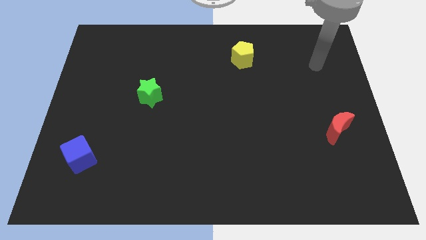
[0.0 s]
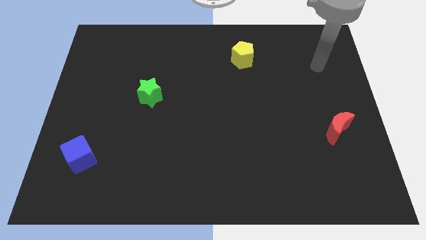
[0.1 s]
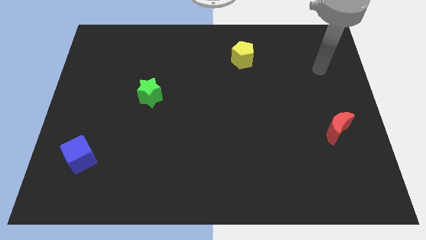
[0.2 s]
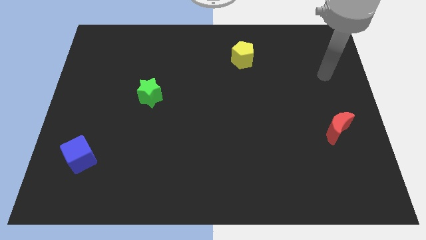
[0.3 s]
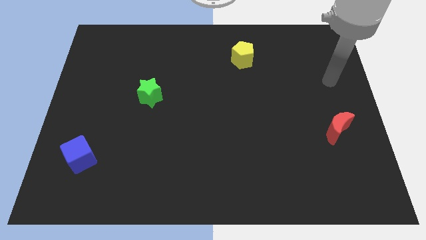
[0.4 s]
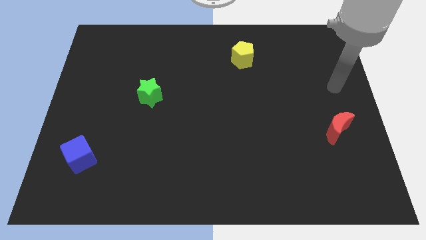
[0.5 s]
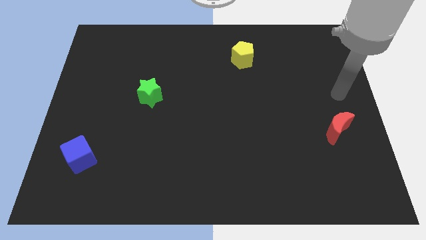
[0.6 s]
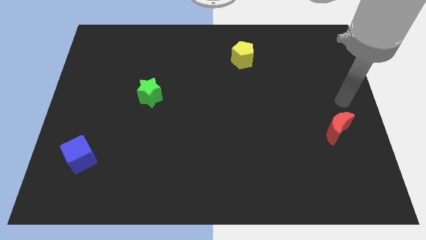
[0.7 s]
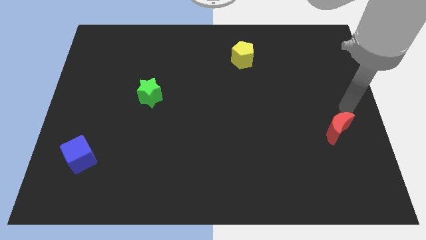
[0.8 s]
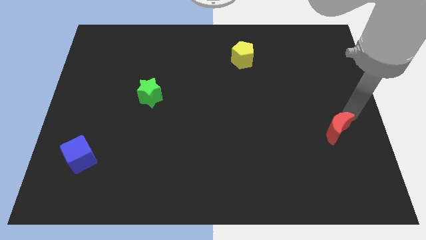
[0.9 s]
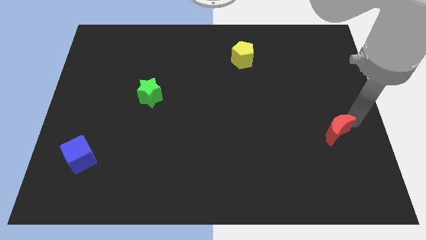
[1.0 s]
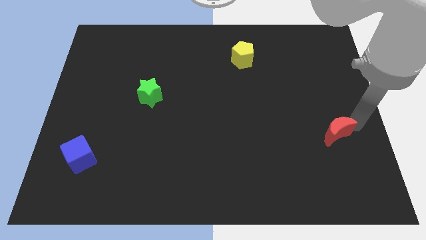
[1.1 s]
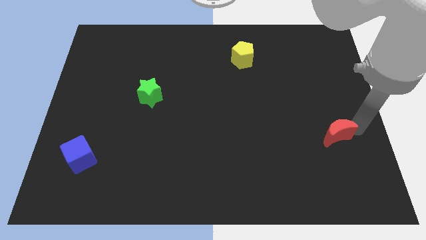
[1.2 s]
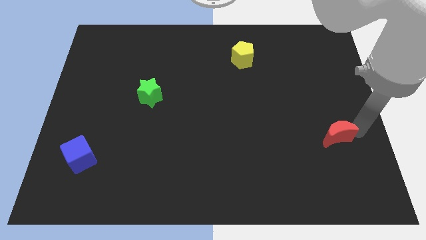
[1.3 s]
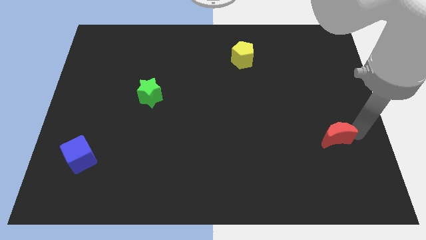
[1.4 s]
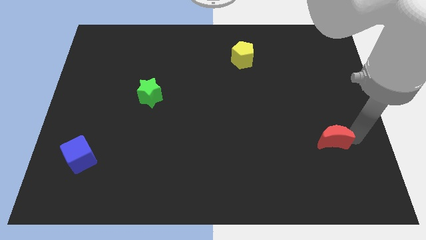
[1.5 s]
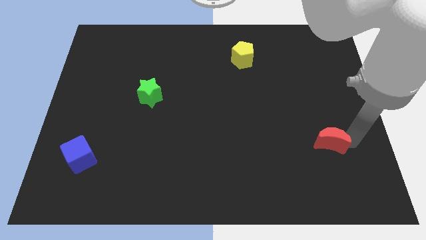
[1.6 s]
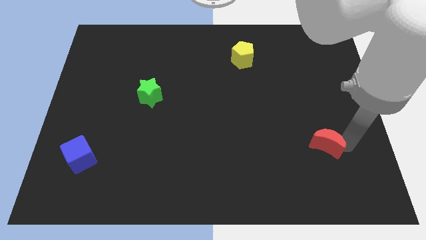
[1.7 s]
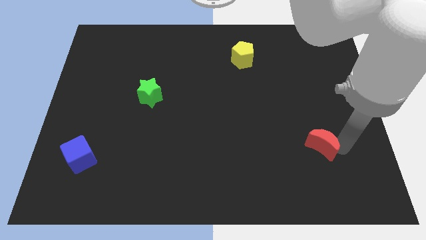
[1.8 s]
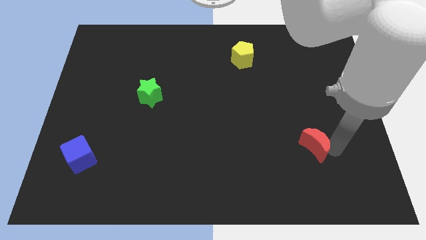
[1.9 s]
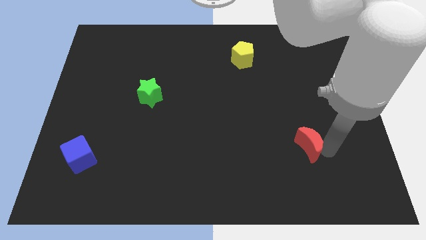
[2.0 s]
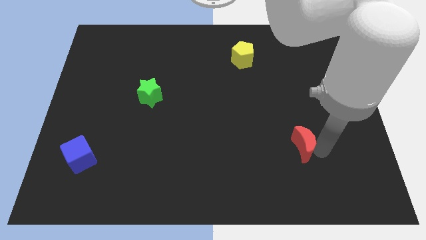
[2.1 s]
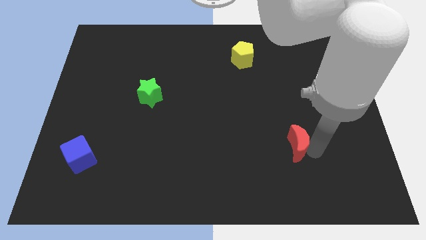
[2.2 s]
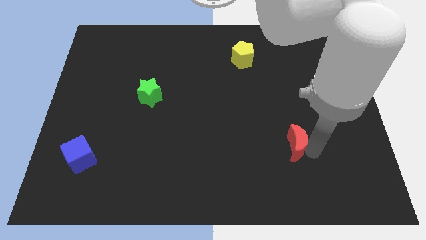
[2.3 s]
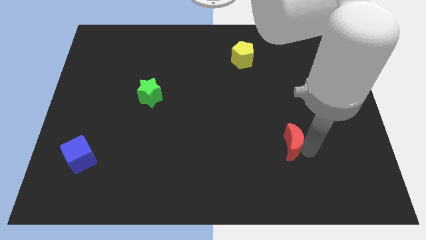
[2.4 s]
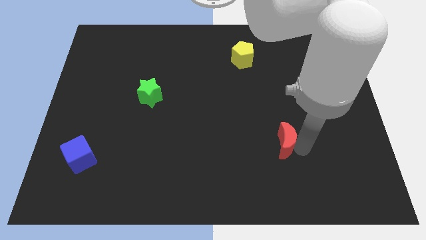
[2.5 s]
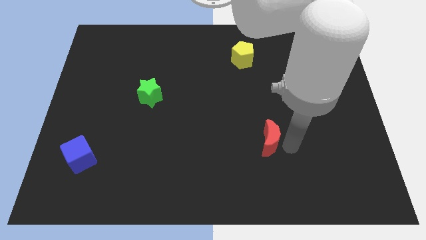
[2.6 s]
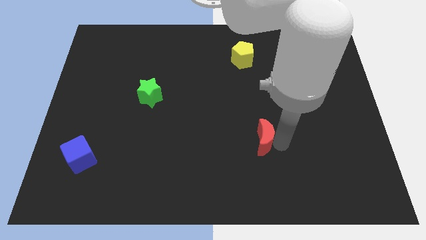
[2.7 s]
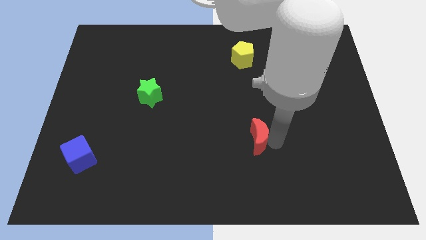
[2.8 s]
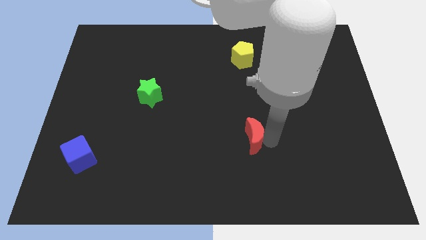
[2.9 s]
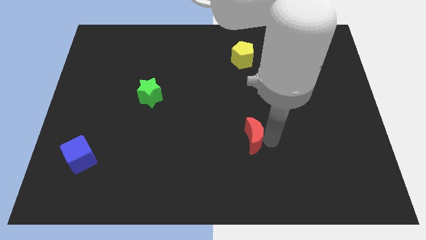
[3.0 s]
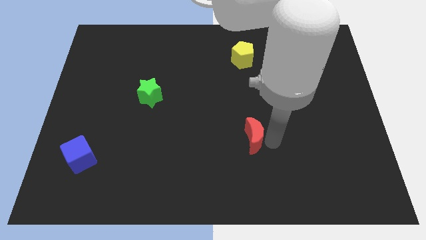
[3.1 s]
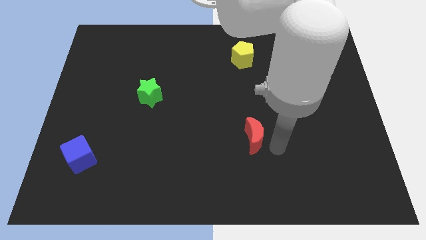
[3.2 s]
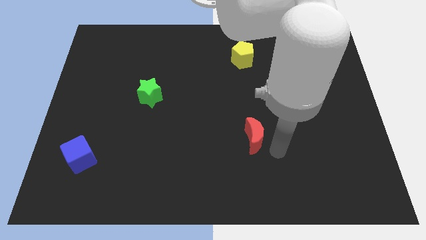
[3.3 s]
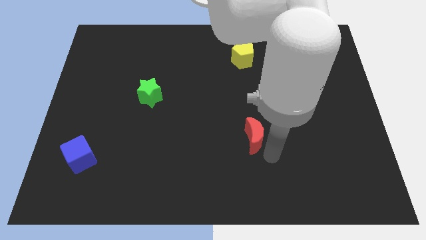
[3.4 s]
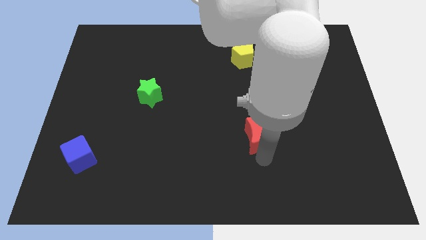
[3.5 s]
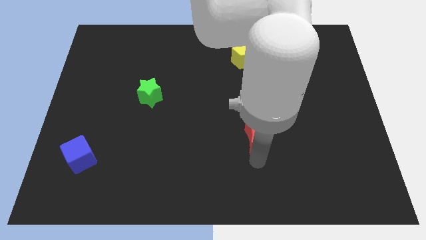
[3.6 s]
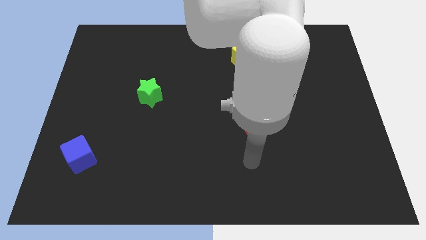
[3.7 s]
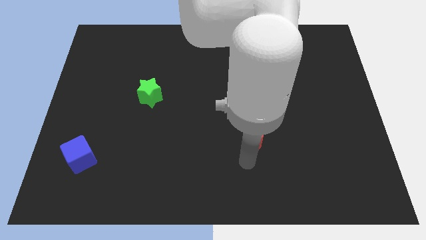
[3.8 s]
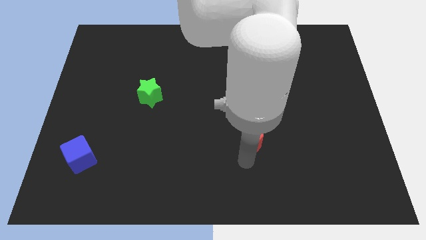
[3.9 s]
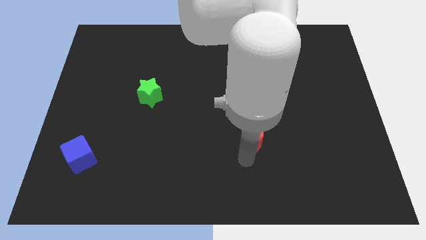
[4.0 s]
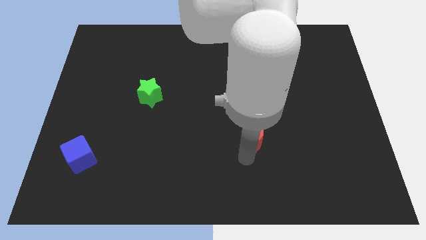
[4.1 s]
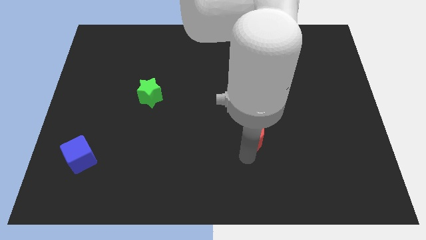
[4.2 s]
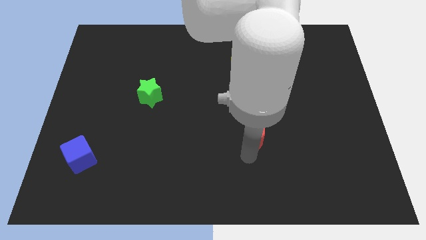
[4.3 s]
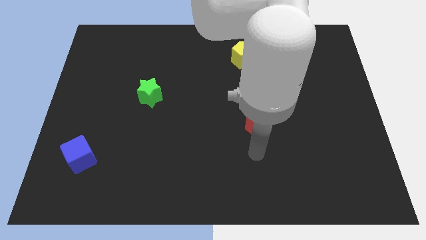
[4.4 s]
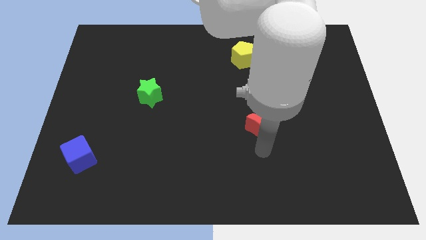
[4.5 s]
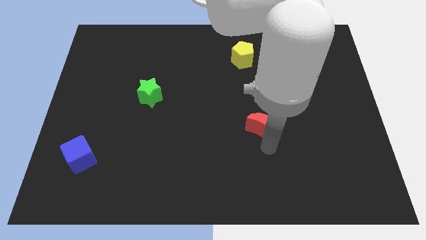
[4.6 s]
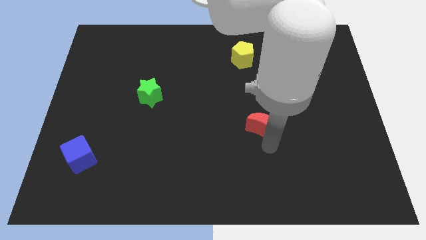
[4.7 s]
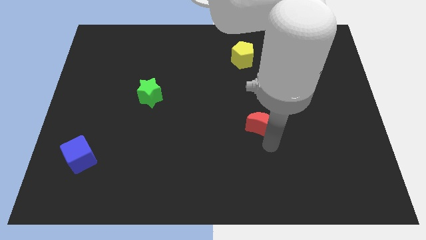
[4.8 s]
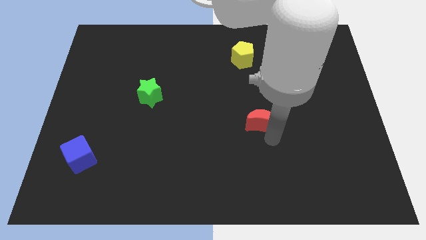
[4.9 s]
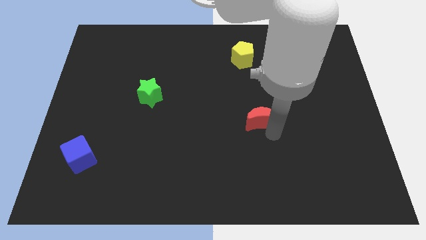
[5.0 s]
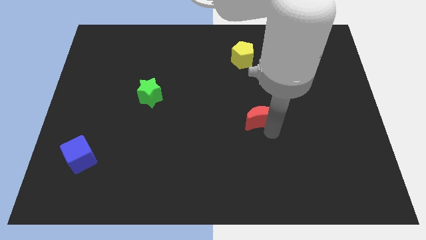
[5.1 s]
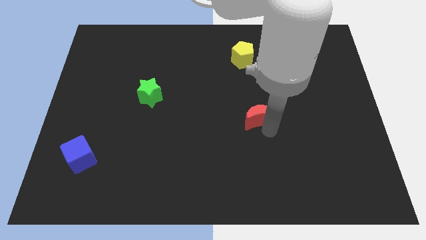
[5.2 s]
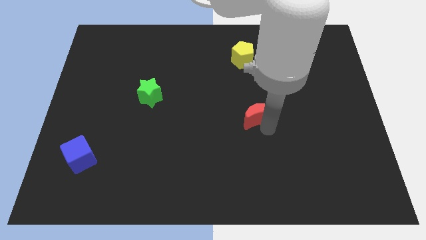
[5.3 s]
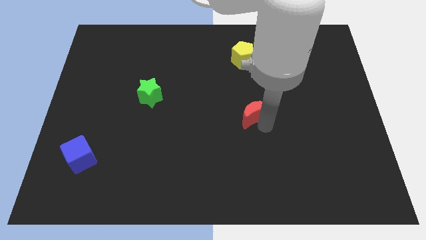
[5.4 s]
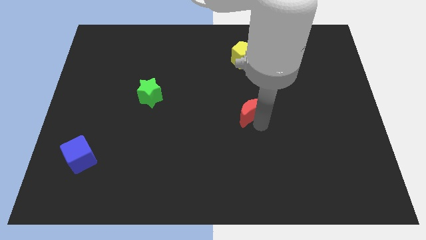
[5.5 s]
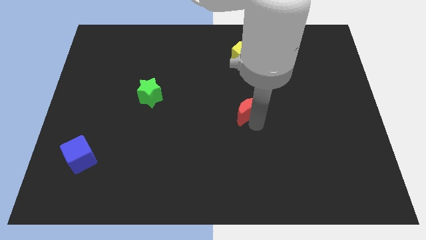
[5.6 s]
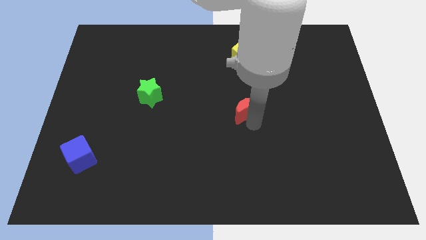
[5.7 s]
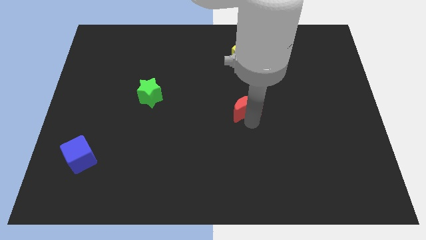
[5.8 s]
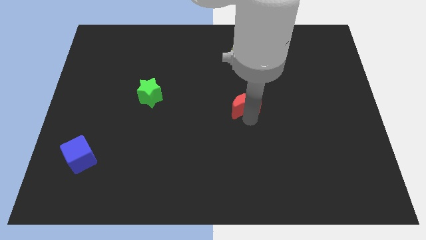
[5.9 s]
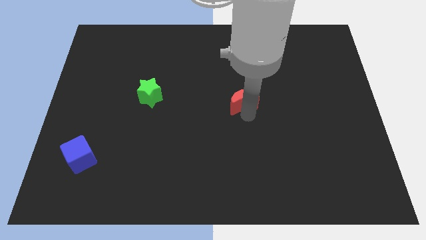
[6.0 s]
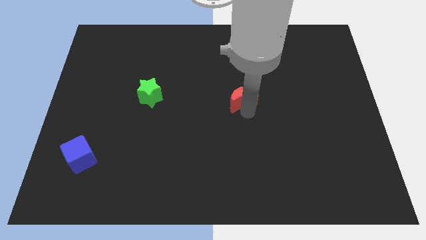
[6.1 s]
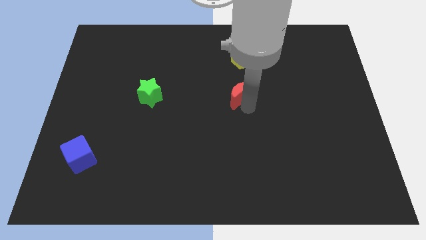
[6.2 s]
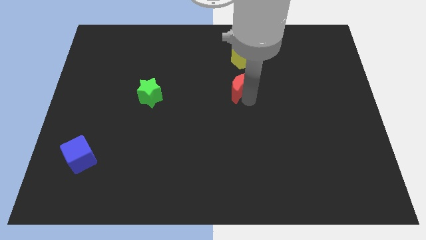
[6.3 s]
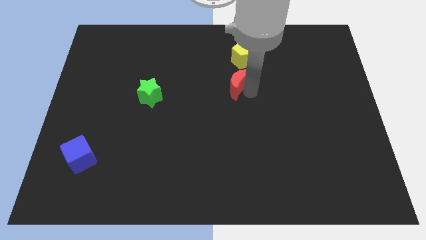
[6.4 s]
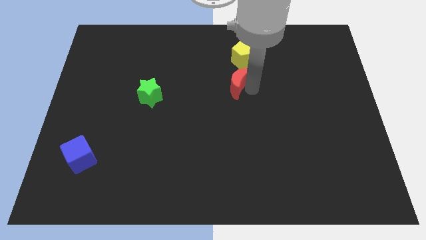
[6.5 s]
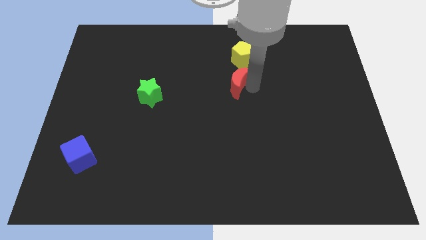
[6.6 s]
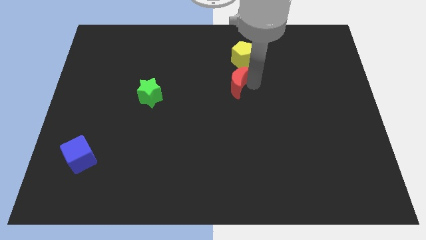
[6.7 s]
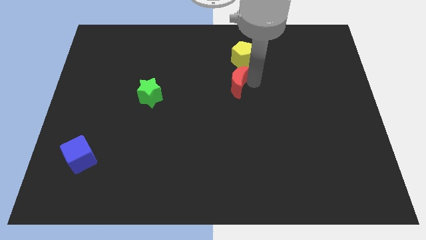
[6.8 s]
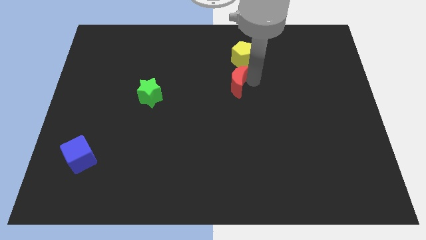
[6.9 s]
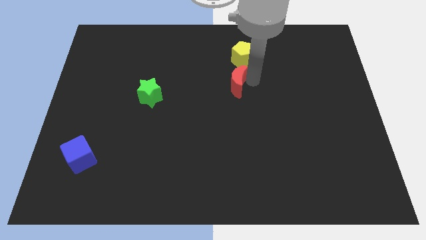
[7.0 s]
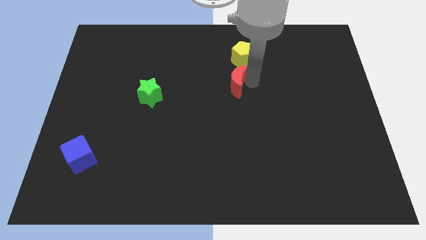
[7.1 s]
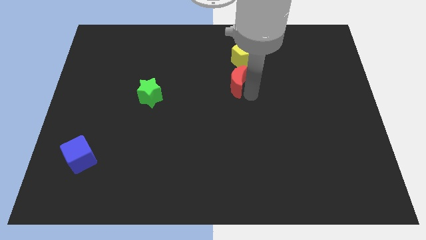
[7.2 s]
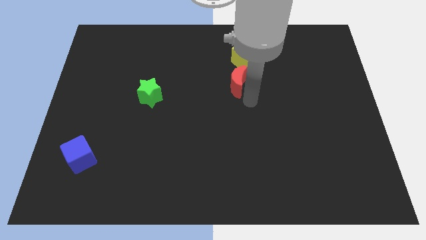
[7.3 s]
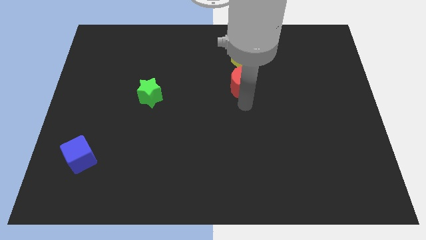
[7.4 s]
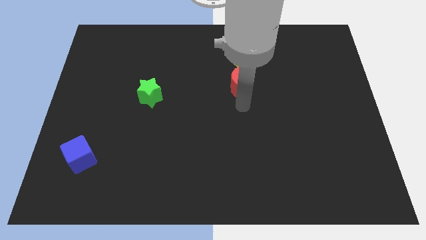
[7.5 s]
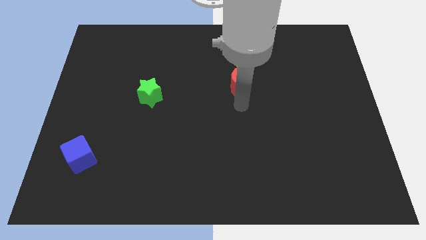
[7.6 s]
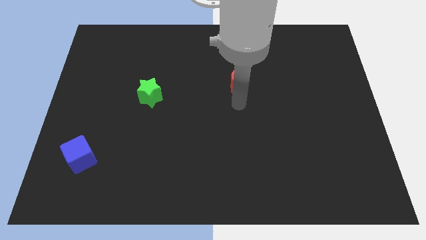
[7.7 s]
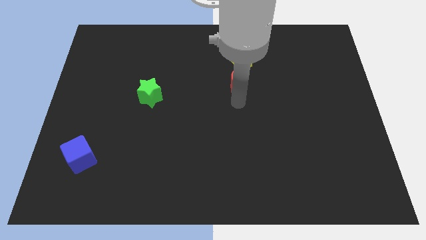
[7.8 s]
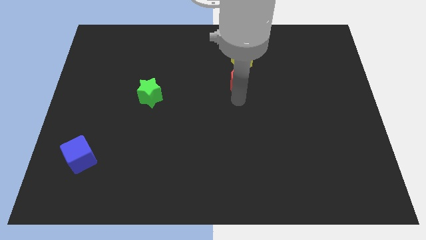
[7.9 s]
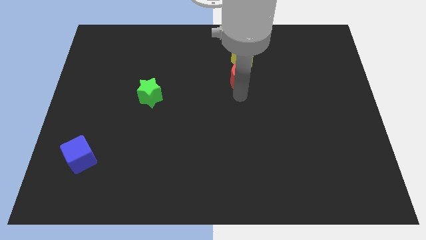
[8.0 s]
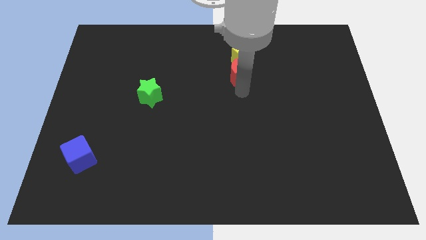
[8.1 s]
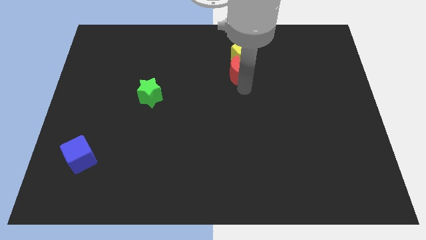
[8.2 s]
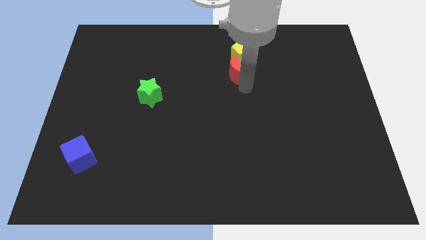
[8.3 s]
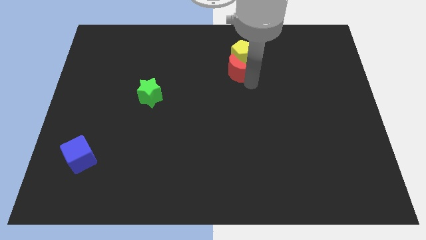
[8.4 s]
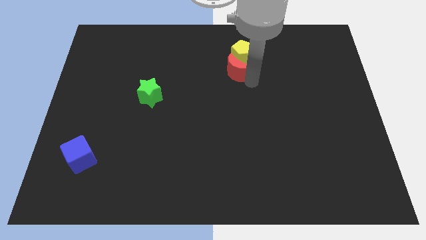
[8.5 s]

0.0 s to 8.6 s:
put the moon towards the yellow block

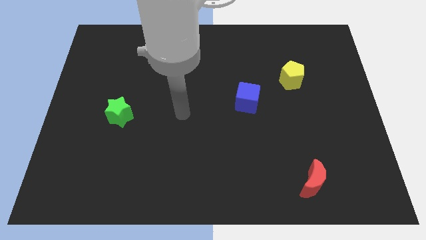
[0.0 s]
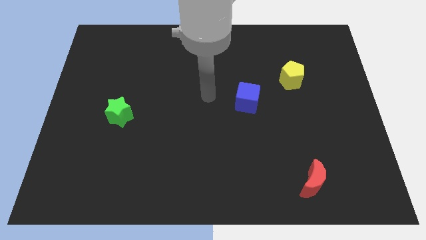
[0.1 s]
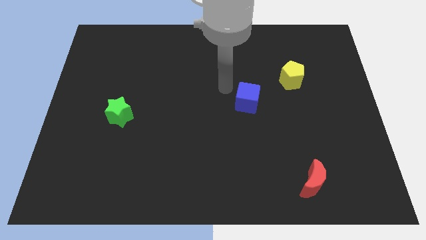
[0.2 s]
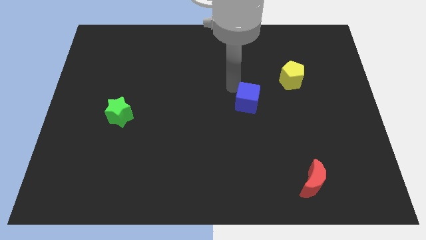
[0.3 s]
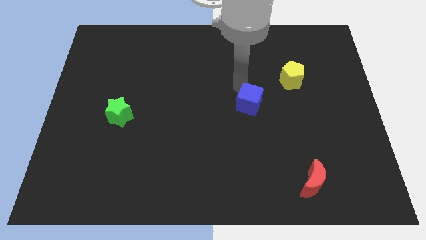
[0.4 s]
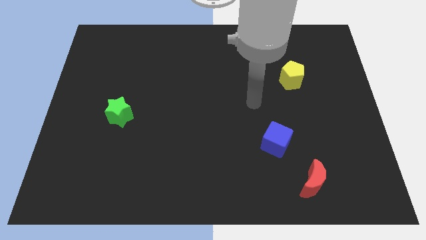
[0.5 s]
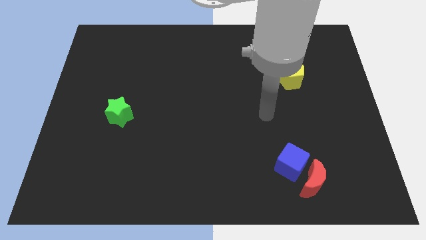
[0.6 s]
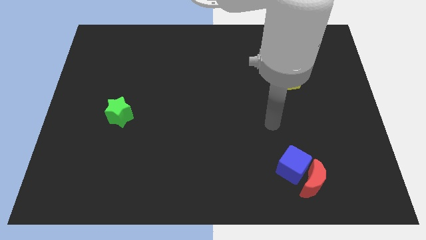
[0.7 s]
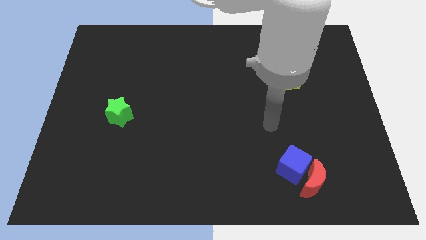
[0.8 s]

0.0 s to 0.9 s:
move the cube towards the red moon
